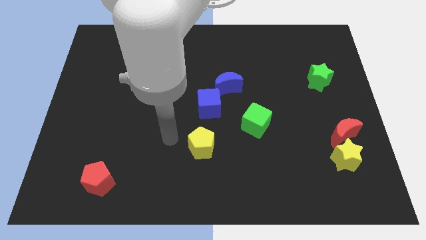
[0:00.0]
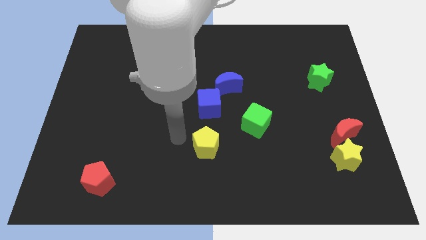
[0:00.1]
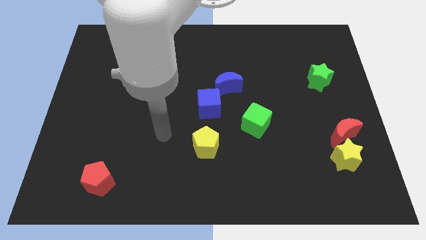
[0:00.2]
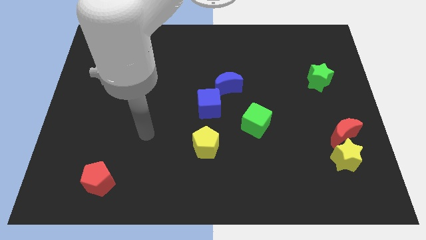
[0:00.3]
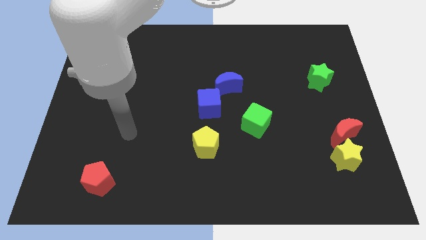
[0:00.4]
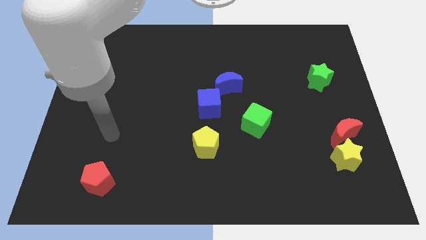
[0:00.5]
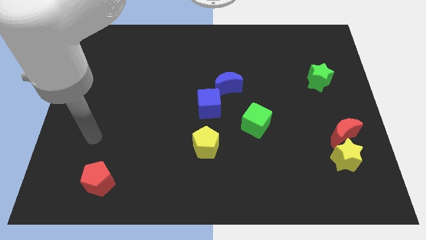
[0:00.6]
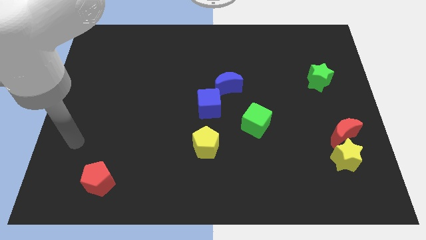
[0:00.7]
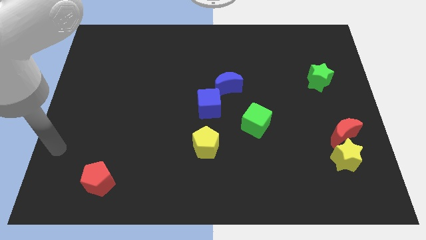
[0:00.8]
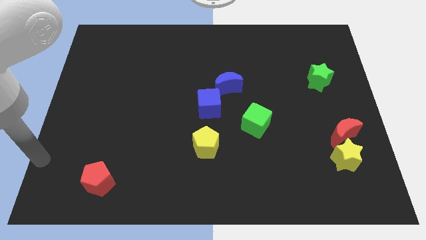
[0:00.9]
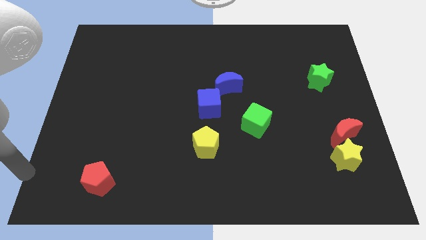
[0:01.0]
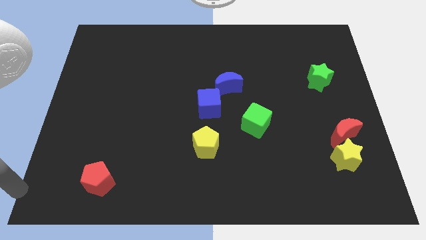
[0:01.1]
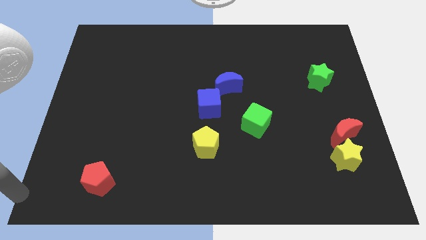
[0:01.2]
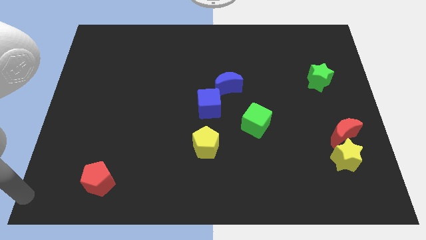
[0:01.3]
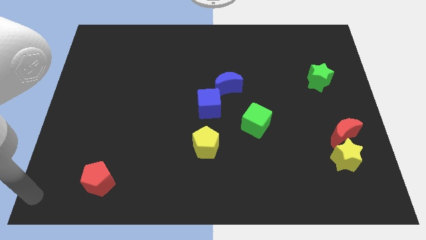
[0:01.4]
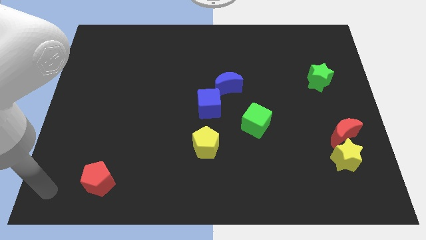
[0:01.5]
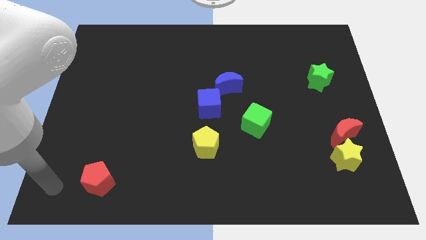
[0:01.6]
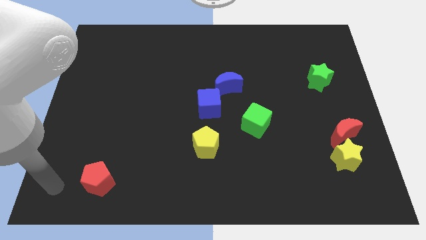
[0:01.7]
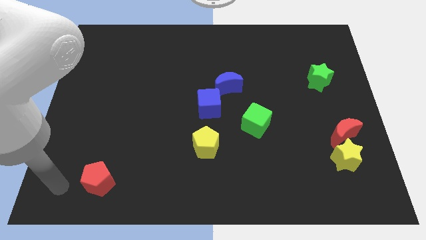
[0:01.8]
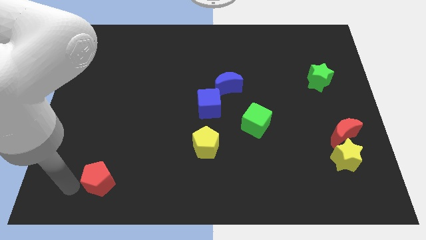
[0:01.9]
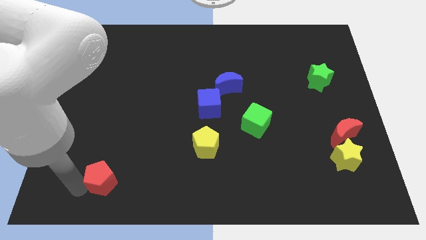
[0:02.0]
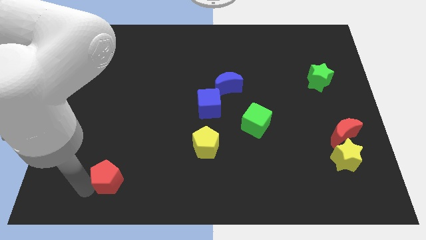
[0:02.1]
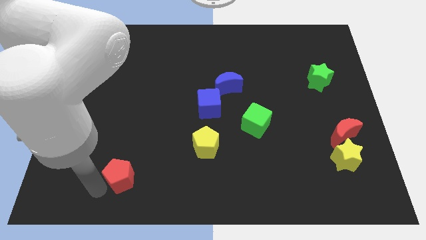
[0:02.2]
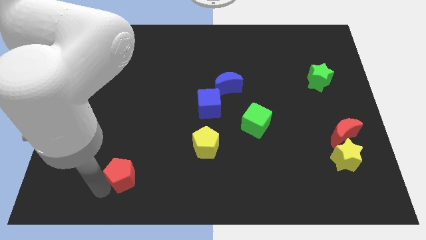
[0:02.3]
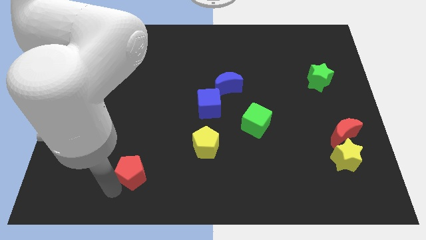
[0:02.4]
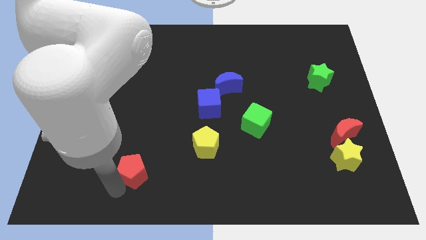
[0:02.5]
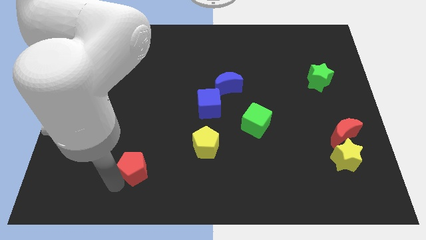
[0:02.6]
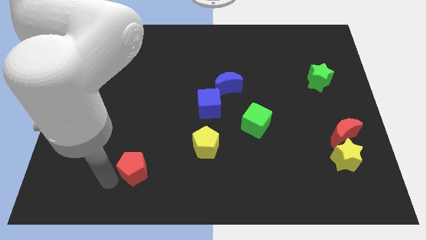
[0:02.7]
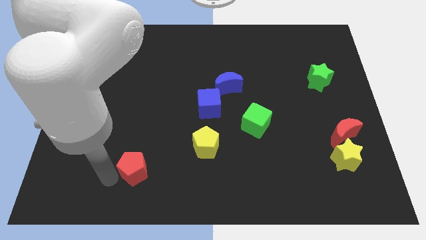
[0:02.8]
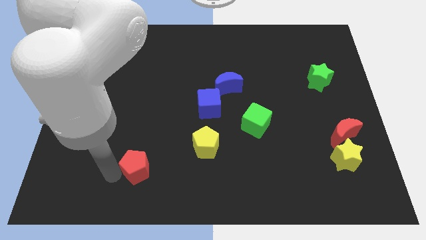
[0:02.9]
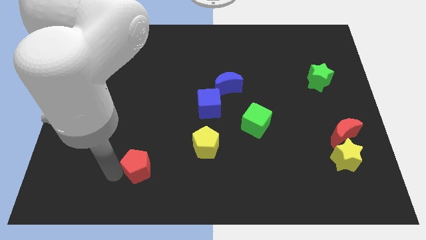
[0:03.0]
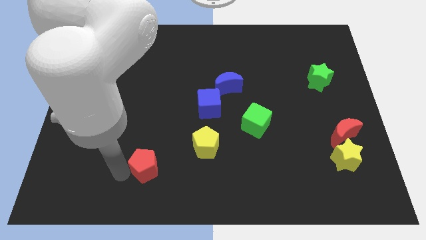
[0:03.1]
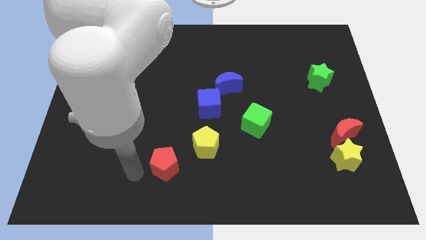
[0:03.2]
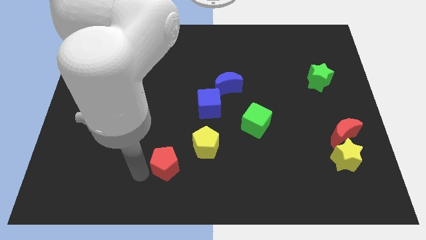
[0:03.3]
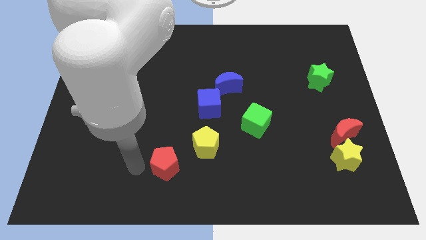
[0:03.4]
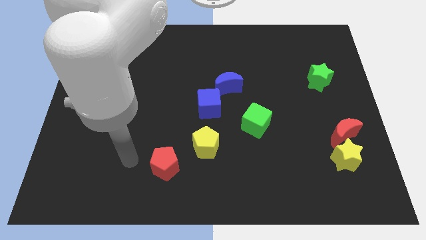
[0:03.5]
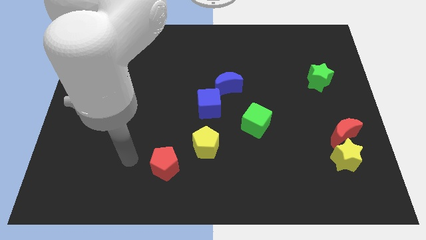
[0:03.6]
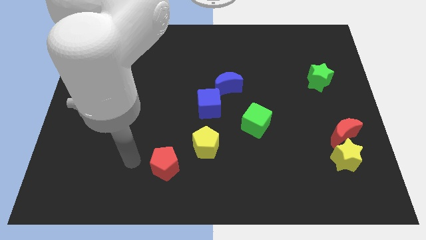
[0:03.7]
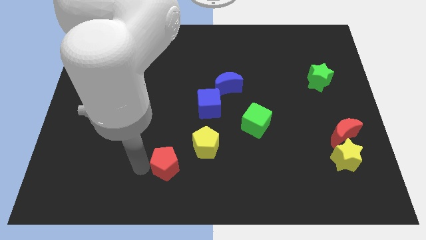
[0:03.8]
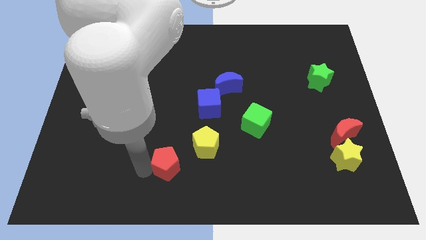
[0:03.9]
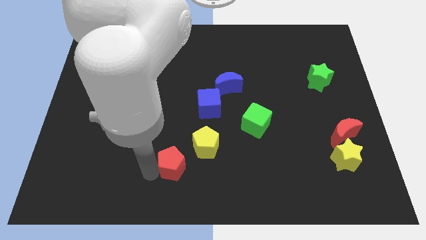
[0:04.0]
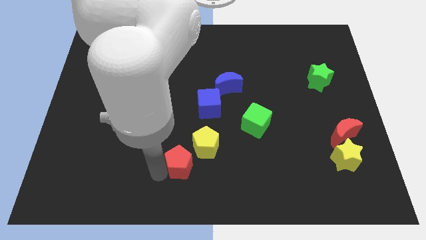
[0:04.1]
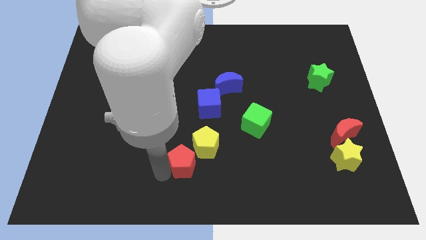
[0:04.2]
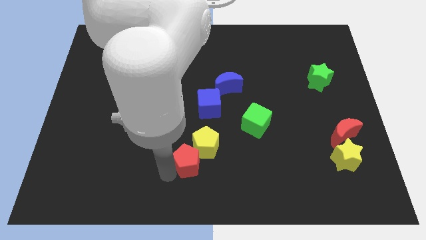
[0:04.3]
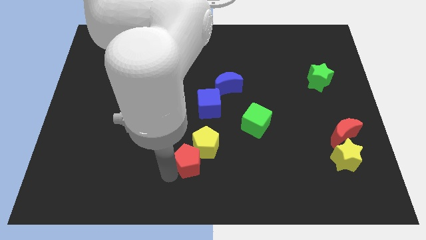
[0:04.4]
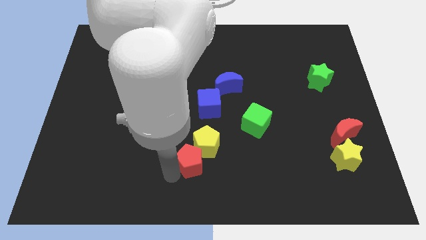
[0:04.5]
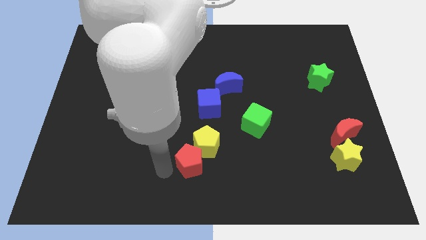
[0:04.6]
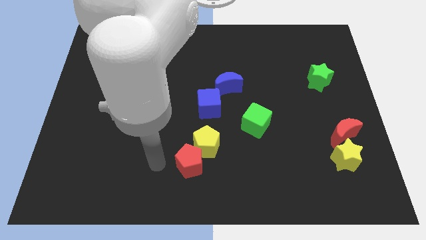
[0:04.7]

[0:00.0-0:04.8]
place red pentagon below the yellow pentagon

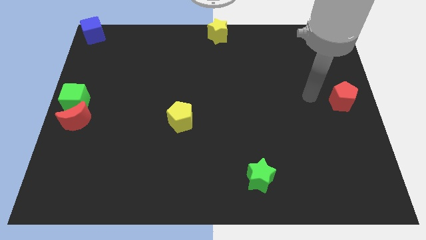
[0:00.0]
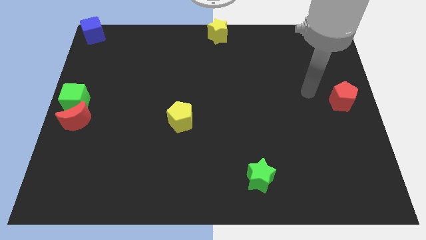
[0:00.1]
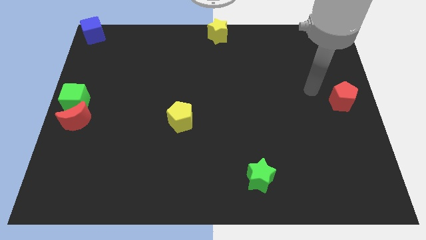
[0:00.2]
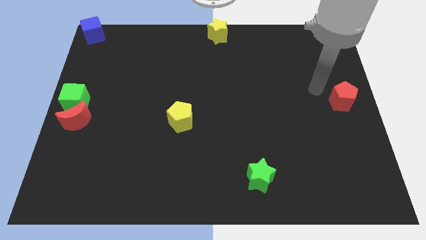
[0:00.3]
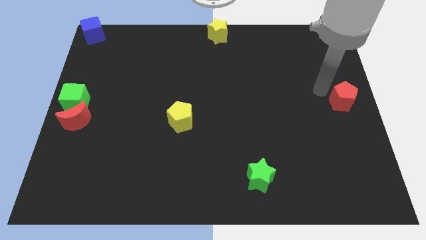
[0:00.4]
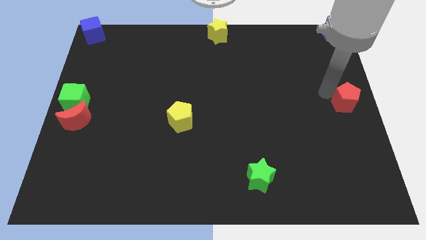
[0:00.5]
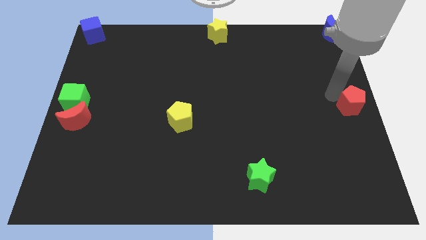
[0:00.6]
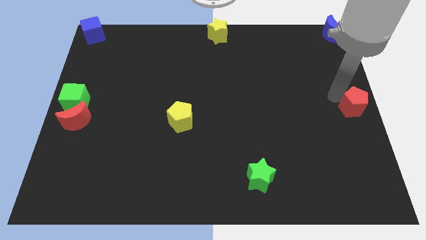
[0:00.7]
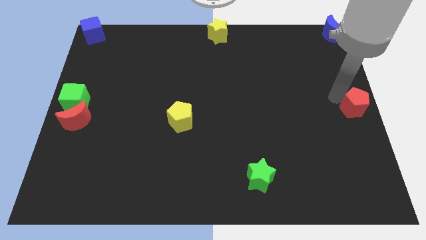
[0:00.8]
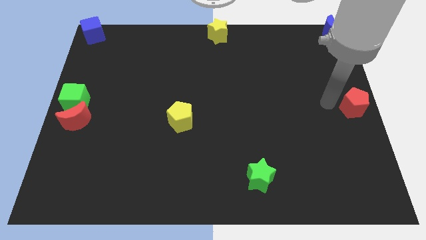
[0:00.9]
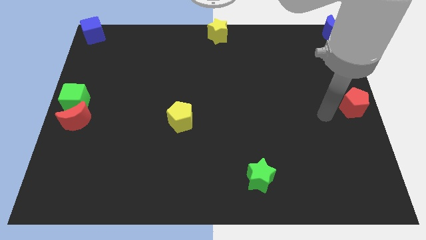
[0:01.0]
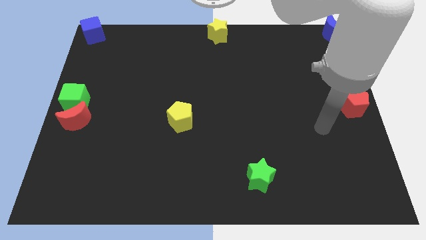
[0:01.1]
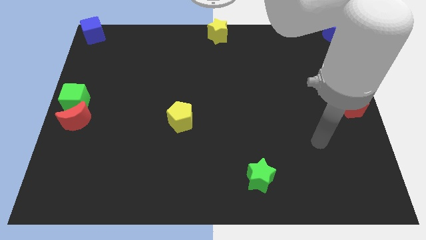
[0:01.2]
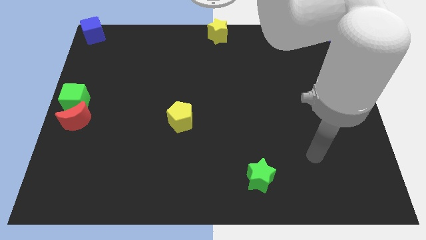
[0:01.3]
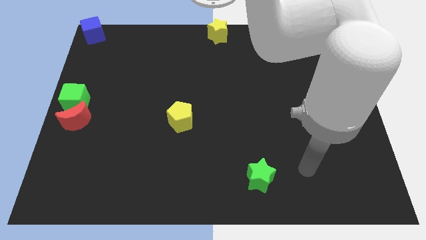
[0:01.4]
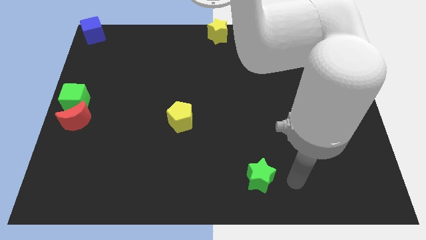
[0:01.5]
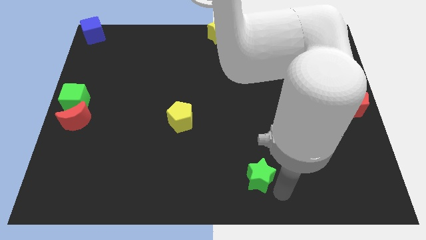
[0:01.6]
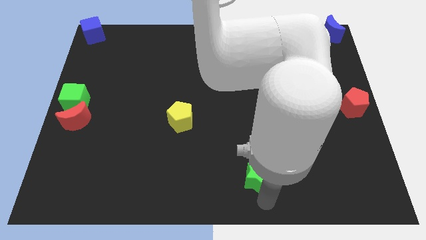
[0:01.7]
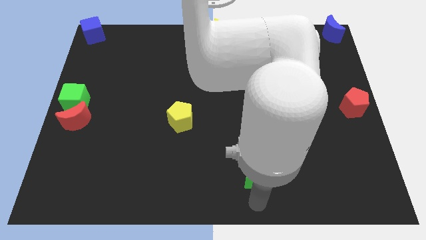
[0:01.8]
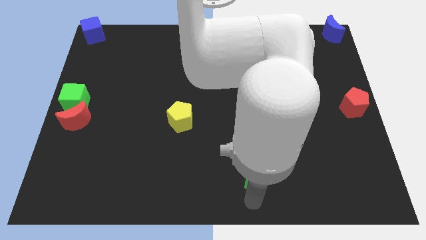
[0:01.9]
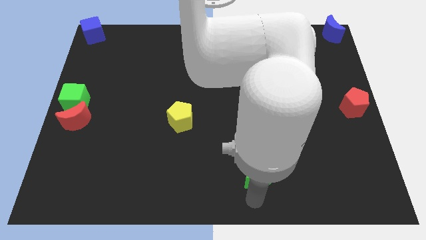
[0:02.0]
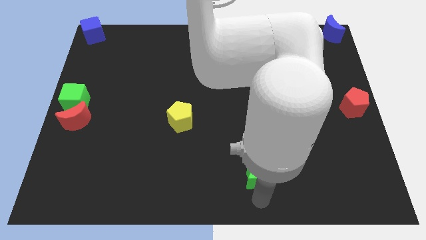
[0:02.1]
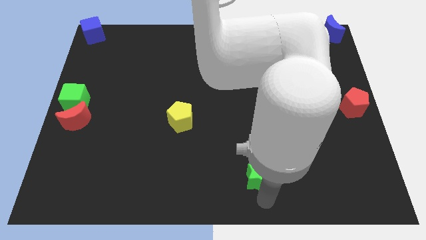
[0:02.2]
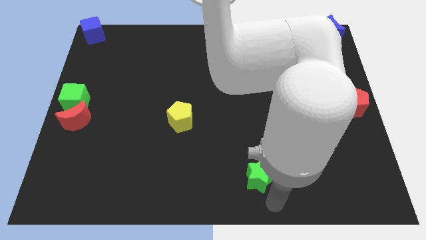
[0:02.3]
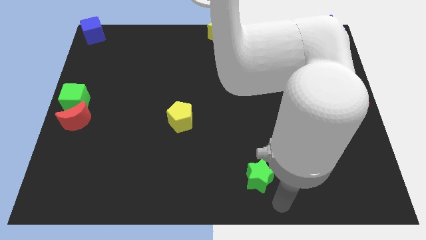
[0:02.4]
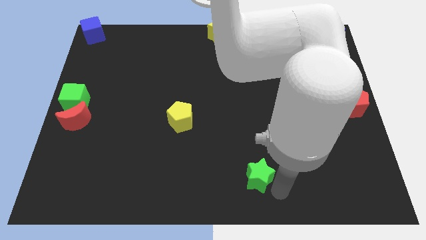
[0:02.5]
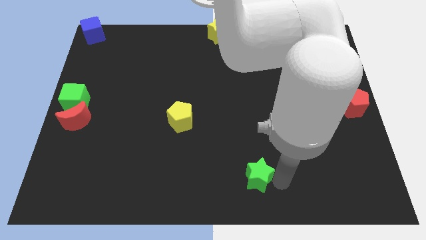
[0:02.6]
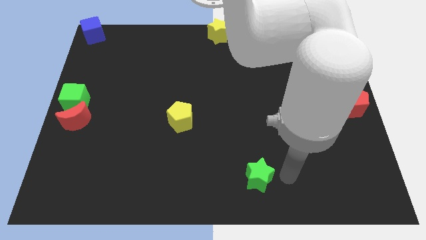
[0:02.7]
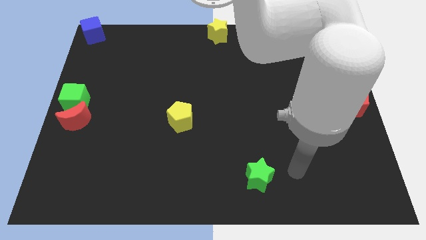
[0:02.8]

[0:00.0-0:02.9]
place the red pentagon to the right center of the board

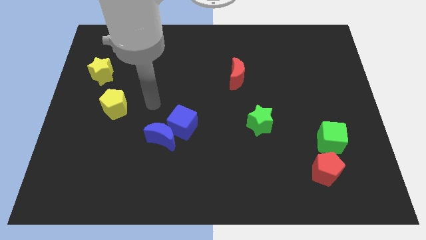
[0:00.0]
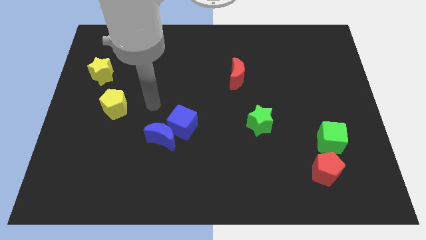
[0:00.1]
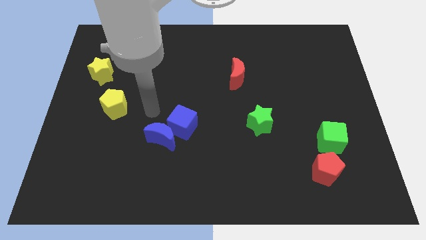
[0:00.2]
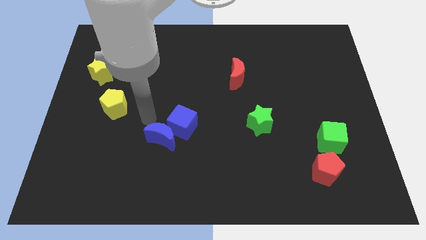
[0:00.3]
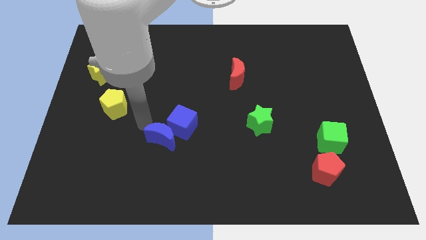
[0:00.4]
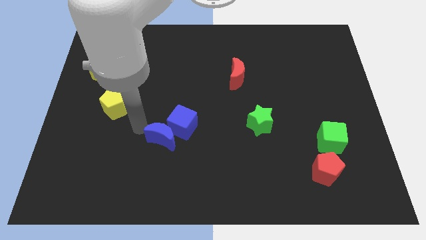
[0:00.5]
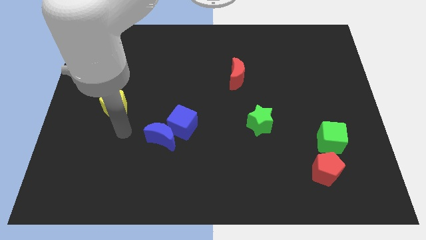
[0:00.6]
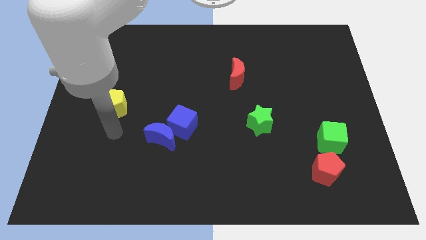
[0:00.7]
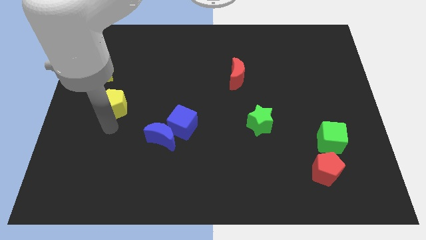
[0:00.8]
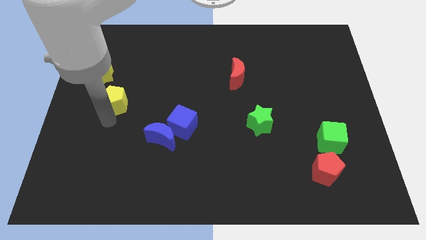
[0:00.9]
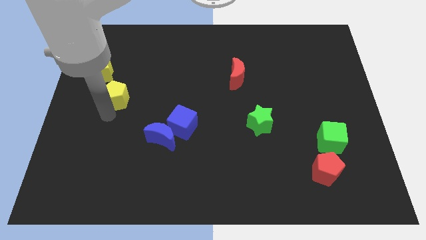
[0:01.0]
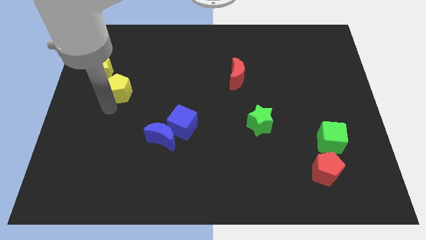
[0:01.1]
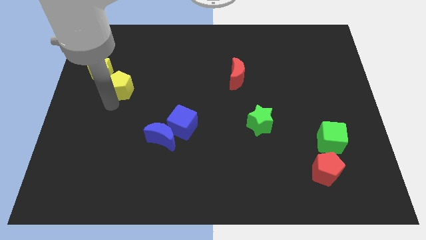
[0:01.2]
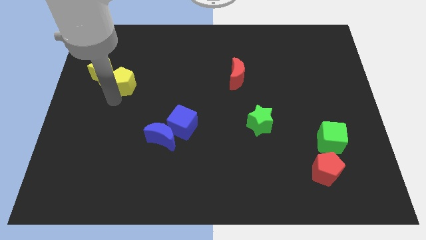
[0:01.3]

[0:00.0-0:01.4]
move the yellow pentagon diagonally bottom right to yellow star
